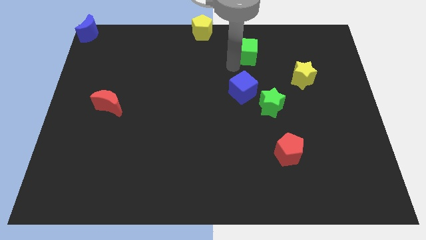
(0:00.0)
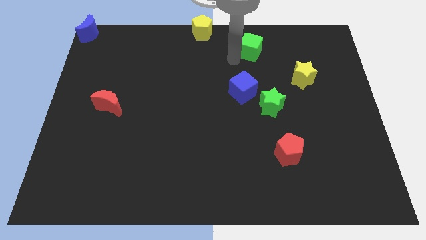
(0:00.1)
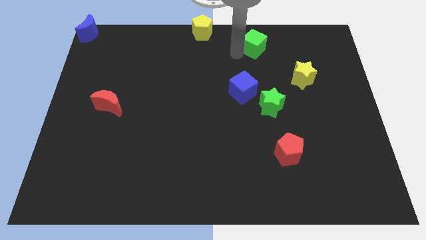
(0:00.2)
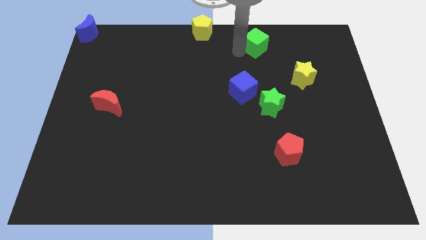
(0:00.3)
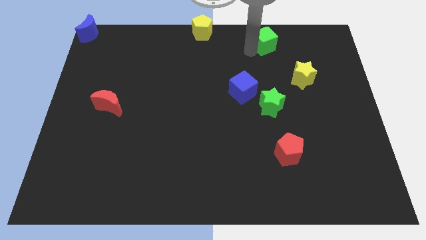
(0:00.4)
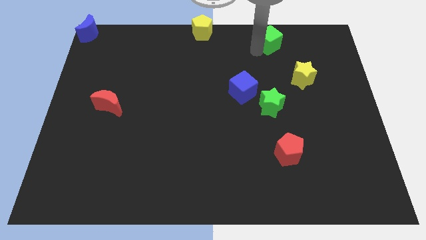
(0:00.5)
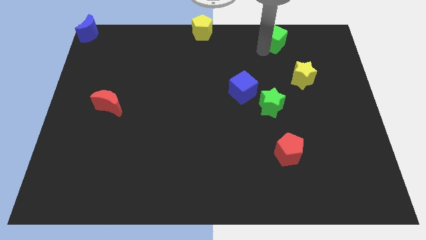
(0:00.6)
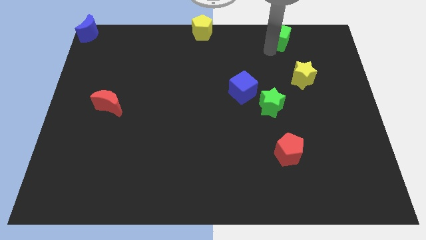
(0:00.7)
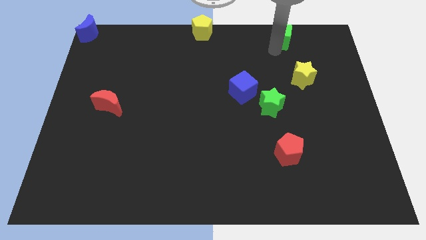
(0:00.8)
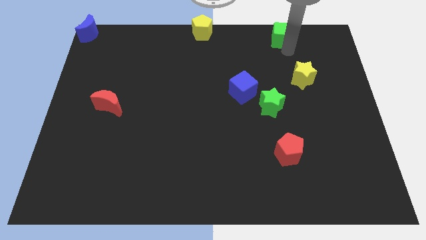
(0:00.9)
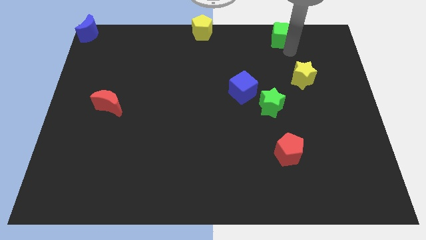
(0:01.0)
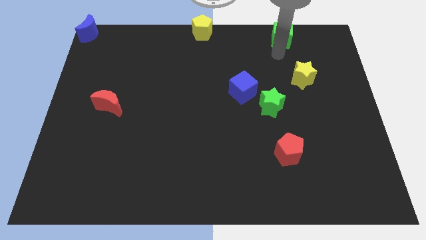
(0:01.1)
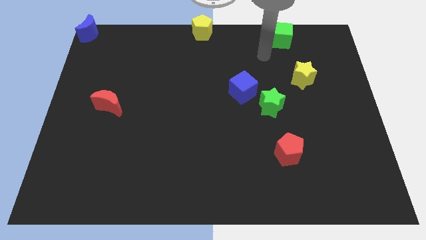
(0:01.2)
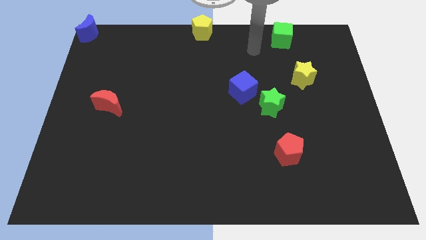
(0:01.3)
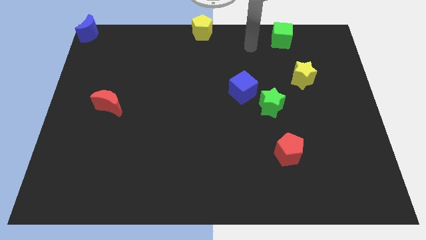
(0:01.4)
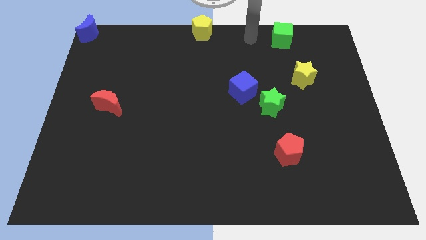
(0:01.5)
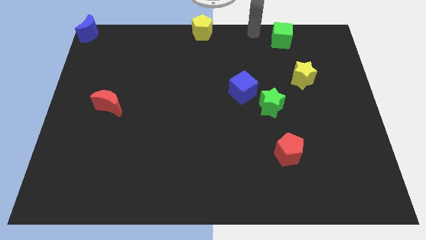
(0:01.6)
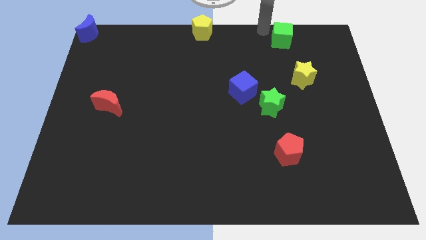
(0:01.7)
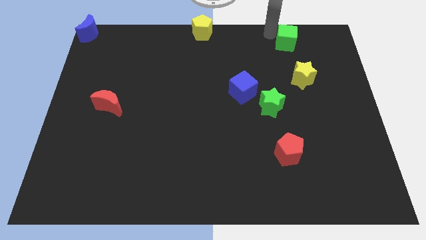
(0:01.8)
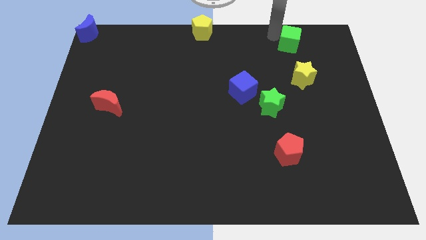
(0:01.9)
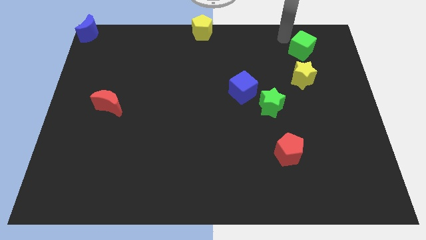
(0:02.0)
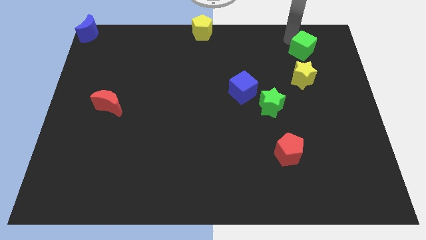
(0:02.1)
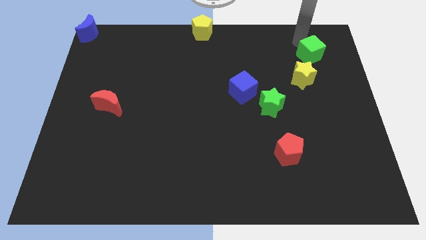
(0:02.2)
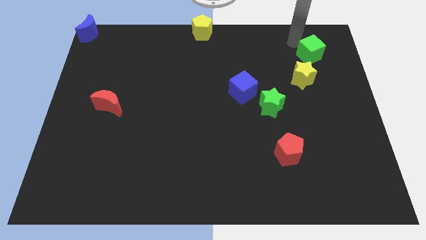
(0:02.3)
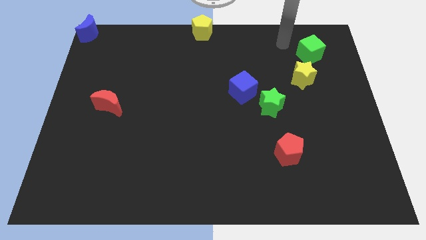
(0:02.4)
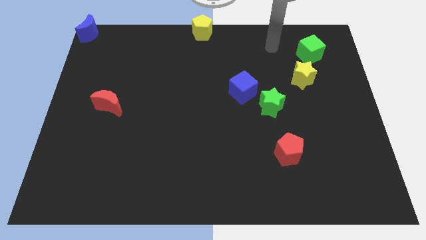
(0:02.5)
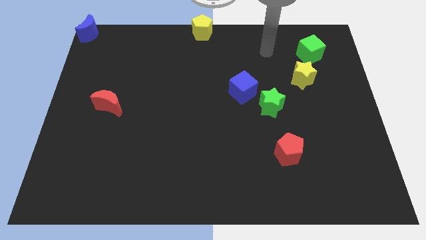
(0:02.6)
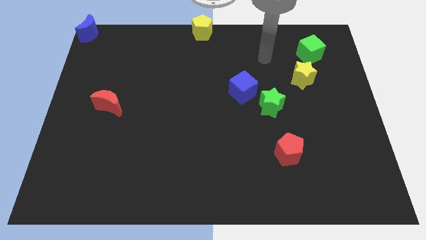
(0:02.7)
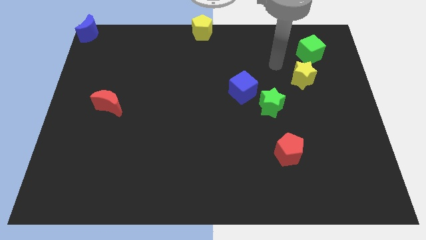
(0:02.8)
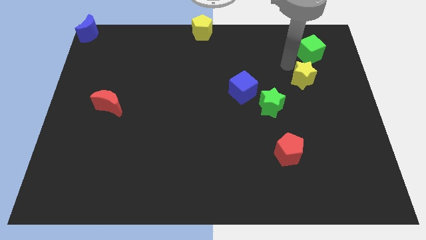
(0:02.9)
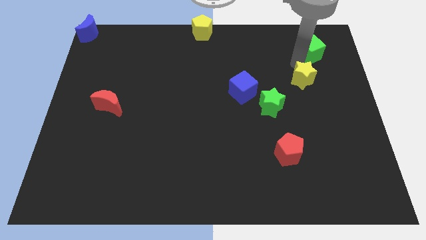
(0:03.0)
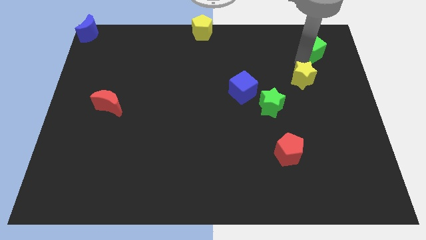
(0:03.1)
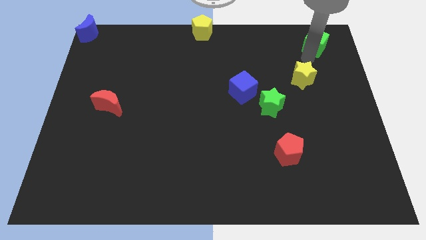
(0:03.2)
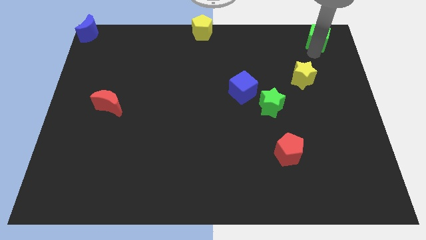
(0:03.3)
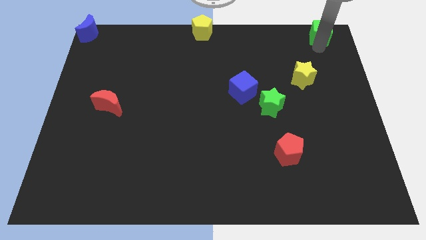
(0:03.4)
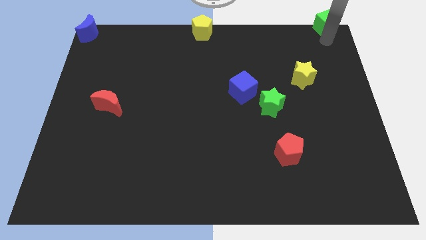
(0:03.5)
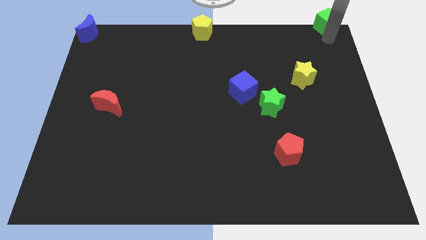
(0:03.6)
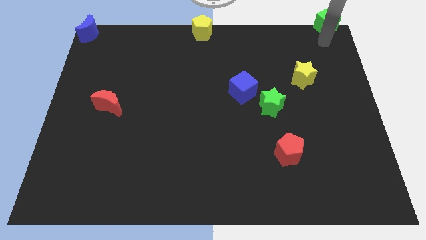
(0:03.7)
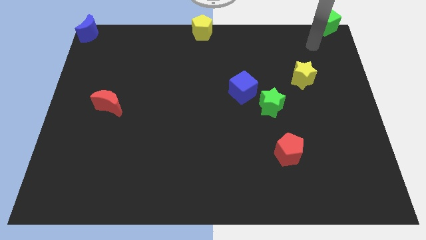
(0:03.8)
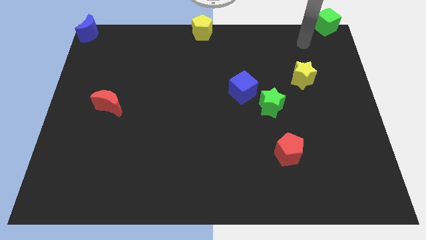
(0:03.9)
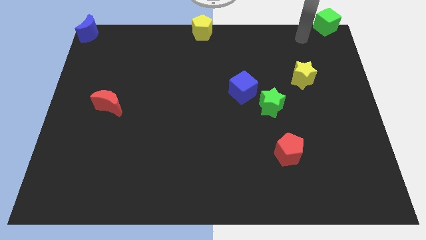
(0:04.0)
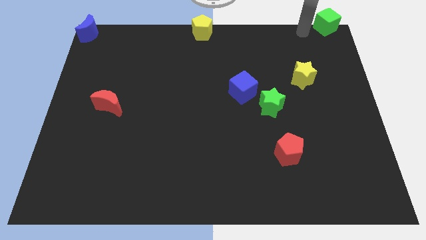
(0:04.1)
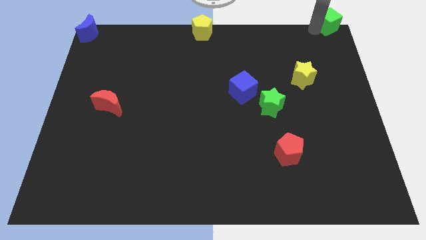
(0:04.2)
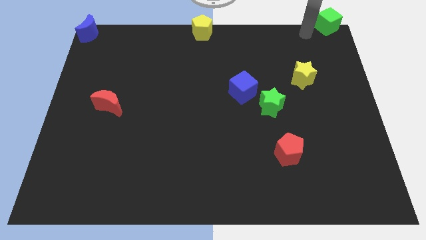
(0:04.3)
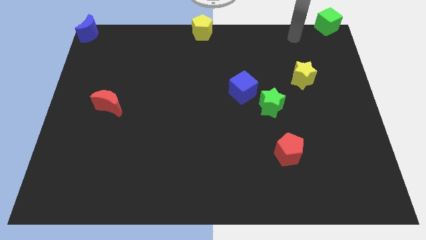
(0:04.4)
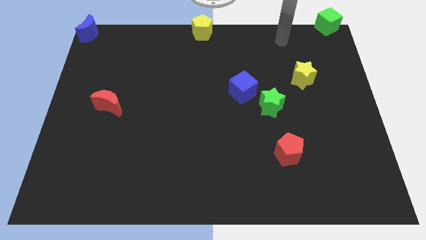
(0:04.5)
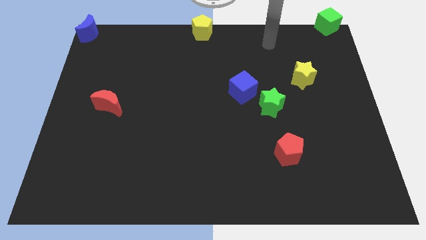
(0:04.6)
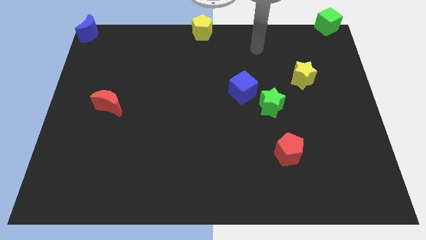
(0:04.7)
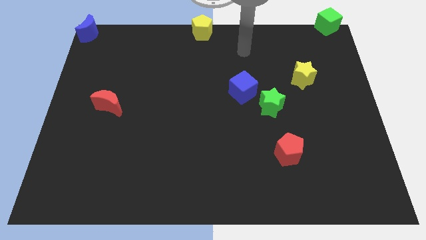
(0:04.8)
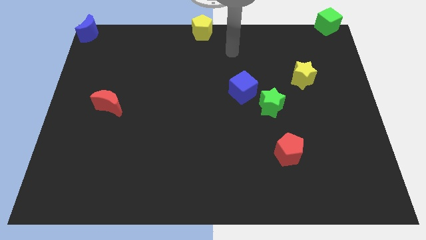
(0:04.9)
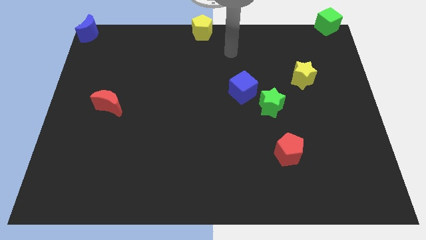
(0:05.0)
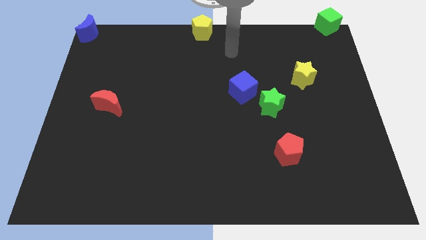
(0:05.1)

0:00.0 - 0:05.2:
move green cube to the top right

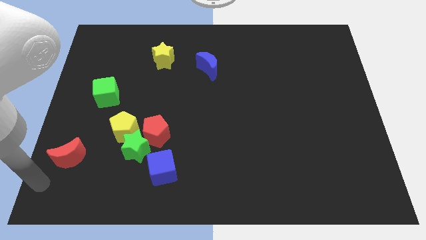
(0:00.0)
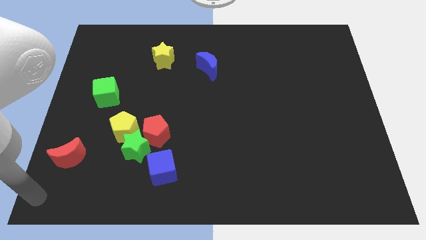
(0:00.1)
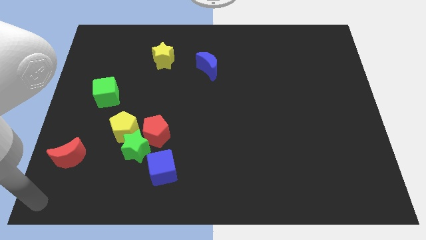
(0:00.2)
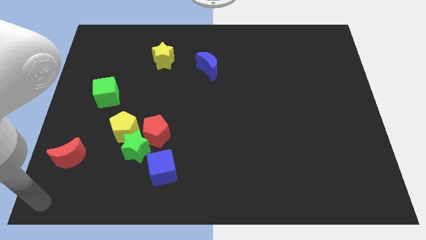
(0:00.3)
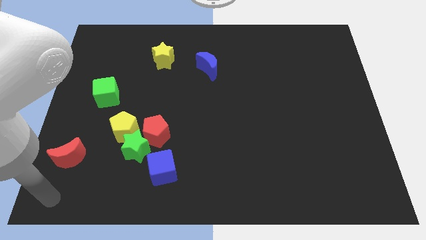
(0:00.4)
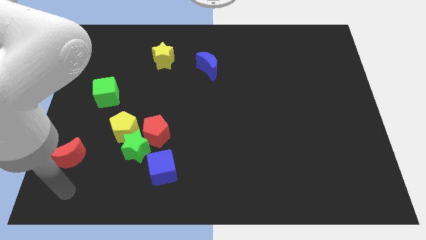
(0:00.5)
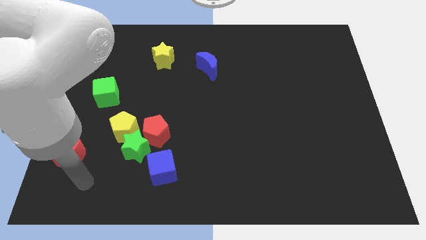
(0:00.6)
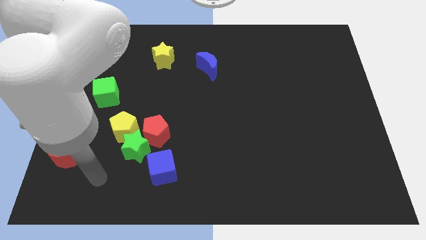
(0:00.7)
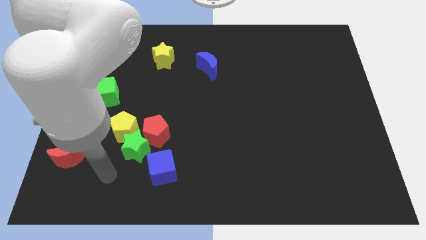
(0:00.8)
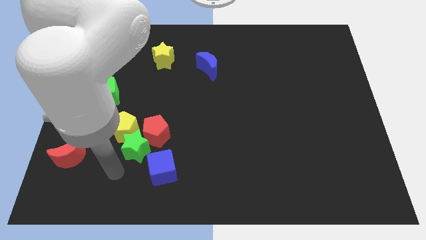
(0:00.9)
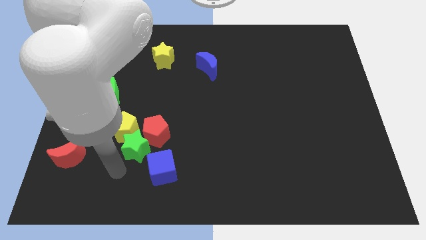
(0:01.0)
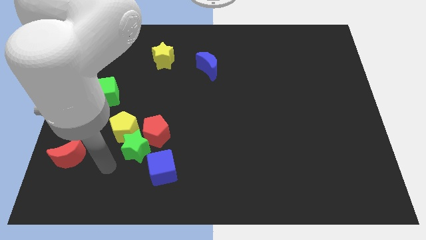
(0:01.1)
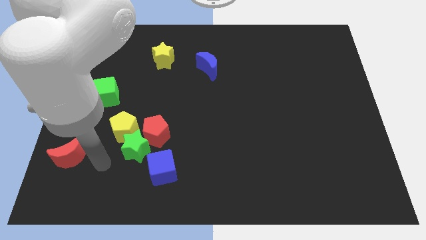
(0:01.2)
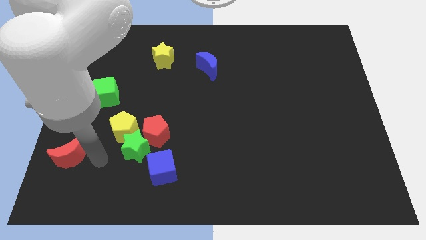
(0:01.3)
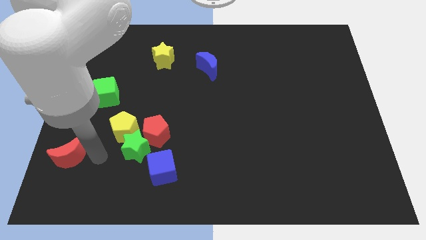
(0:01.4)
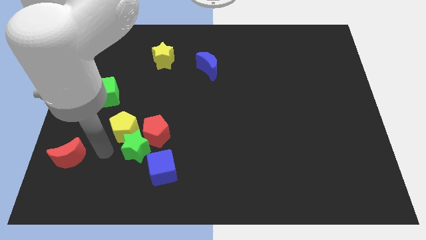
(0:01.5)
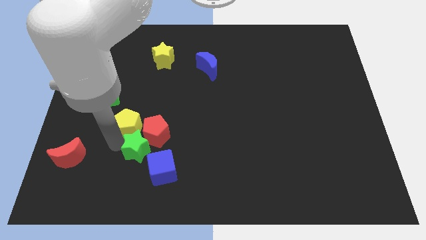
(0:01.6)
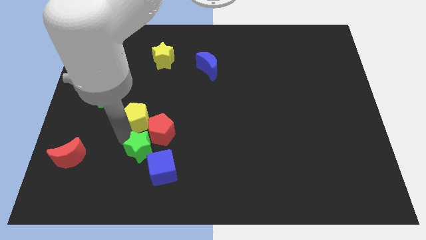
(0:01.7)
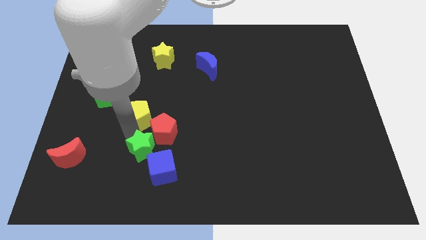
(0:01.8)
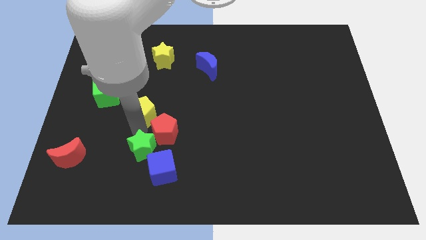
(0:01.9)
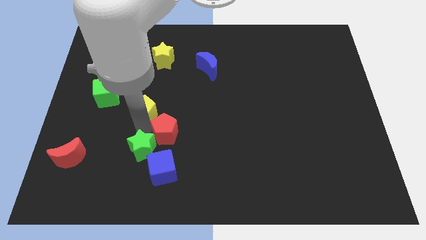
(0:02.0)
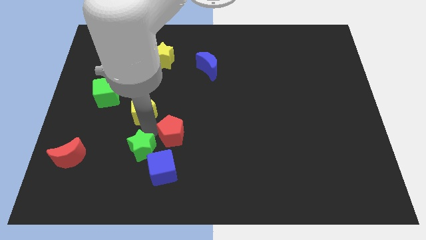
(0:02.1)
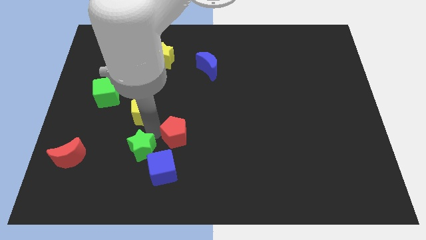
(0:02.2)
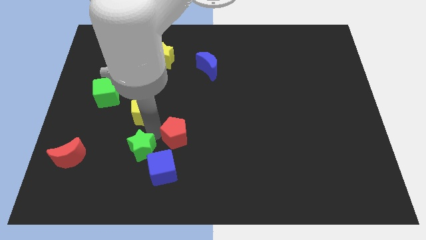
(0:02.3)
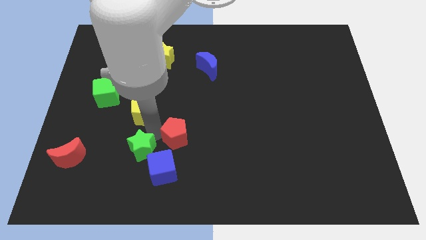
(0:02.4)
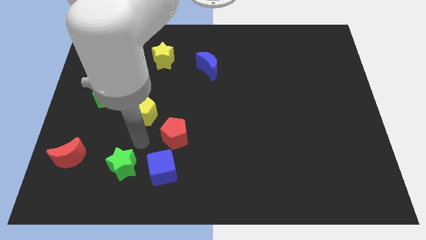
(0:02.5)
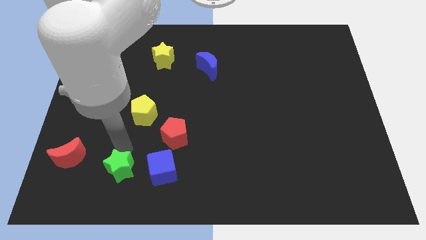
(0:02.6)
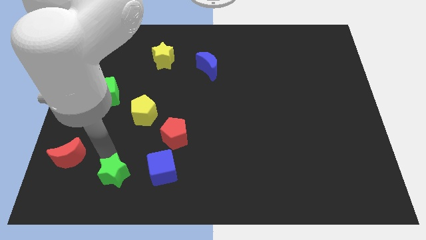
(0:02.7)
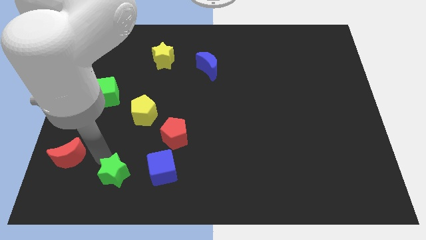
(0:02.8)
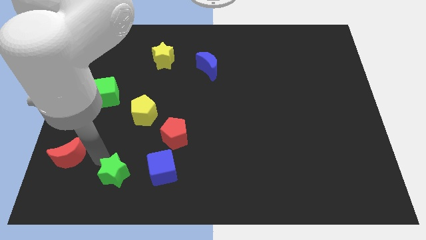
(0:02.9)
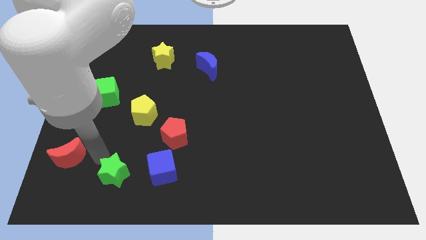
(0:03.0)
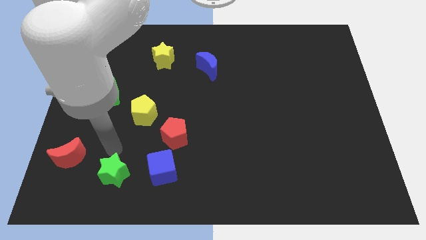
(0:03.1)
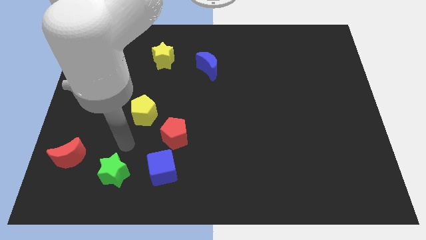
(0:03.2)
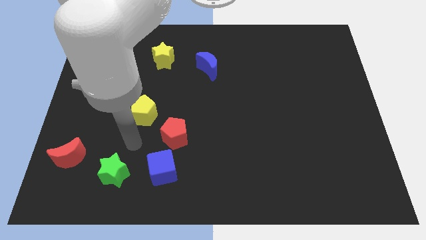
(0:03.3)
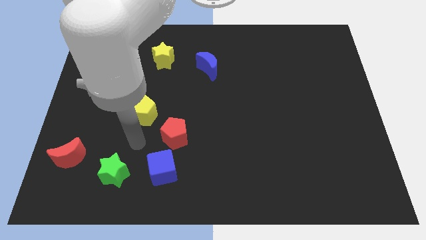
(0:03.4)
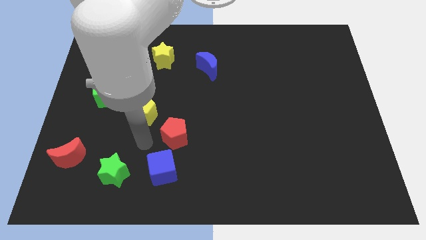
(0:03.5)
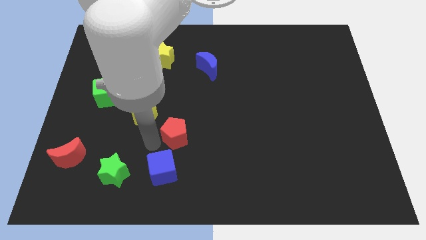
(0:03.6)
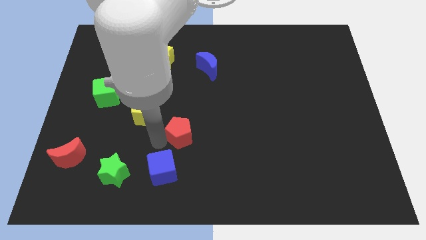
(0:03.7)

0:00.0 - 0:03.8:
separate the green star from the group of blocks
